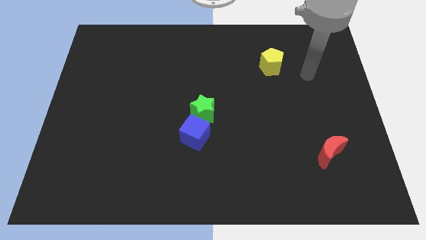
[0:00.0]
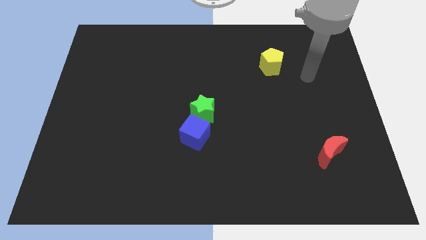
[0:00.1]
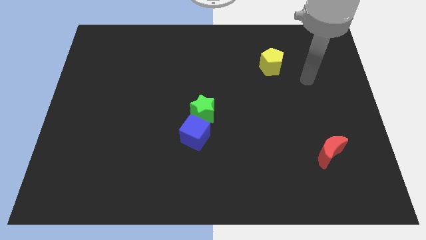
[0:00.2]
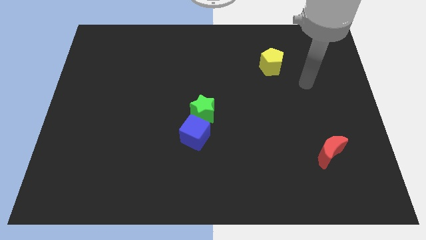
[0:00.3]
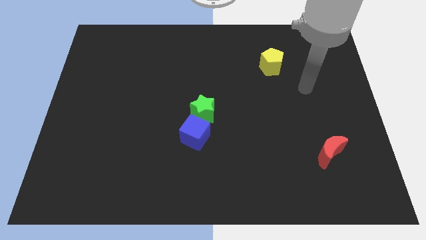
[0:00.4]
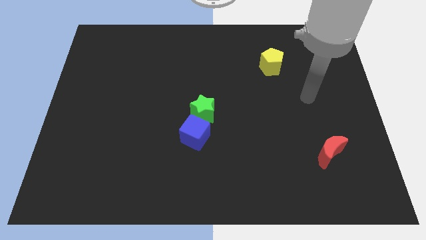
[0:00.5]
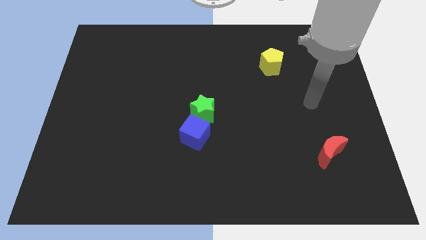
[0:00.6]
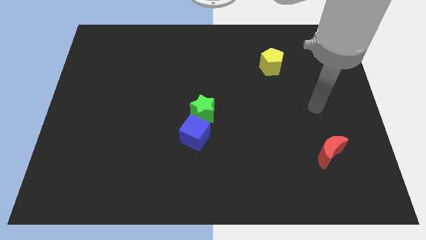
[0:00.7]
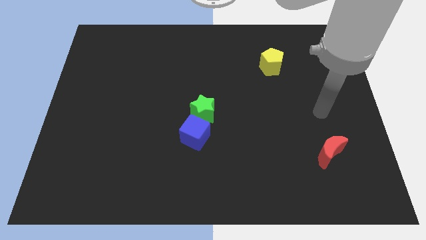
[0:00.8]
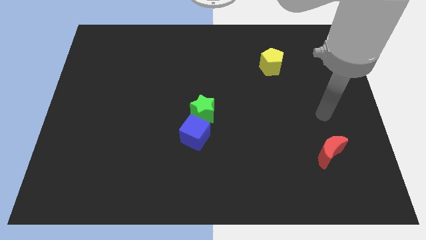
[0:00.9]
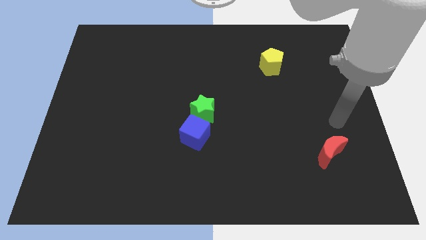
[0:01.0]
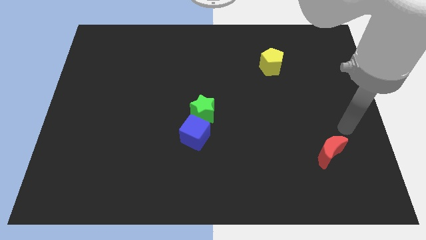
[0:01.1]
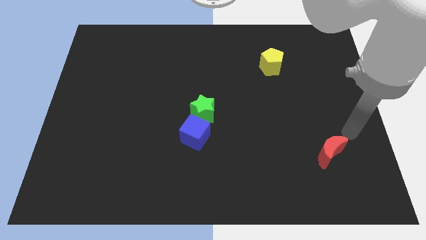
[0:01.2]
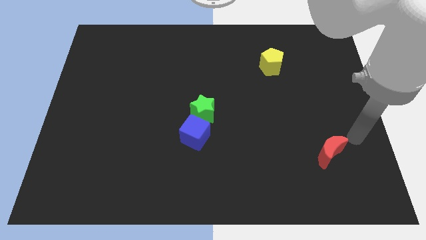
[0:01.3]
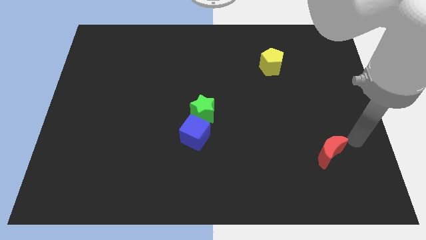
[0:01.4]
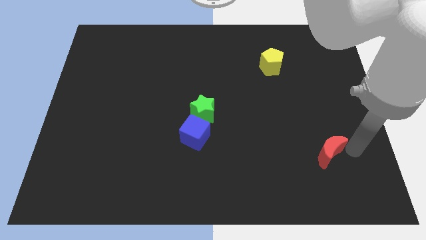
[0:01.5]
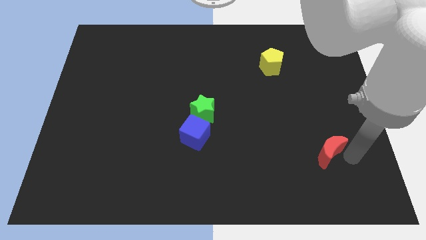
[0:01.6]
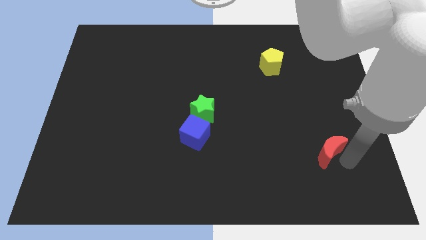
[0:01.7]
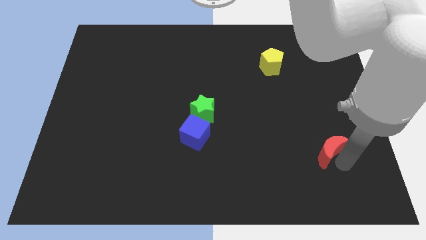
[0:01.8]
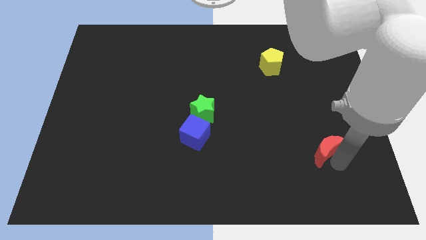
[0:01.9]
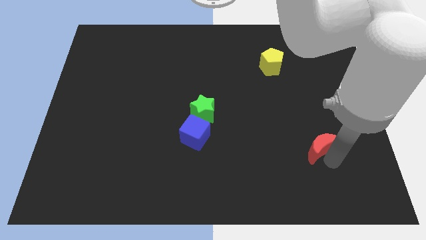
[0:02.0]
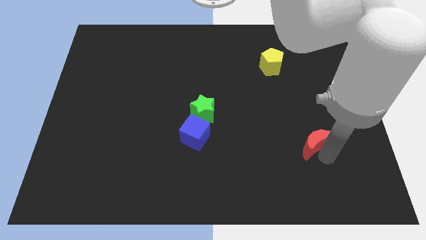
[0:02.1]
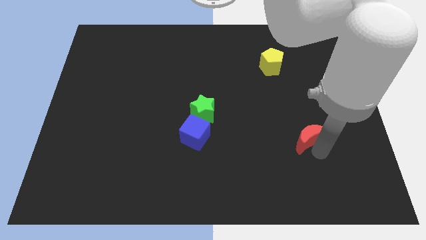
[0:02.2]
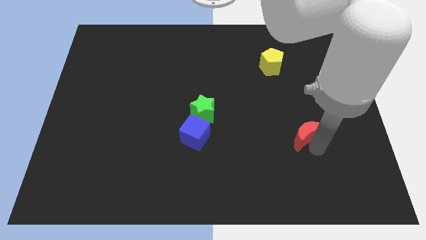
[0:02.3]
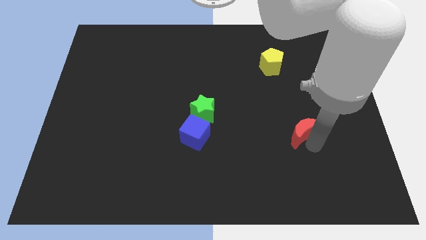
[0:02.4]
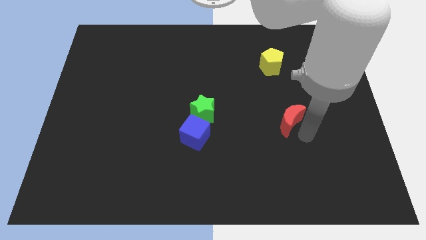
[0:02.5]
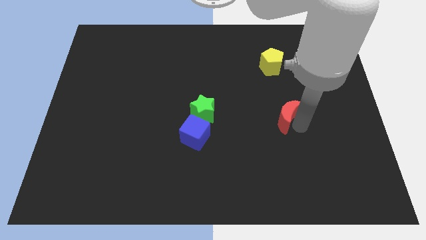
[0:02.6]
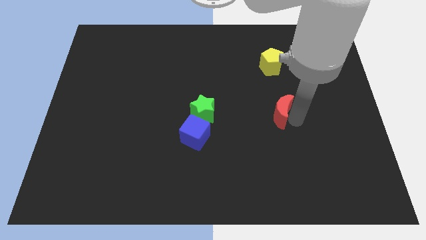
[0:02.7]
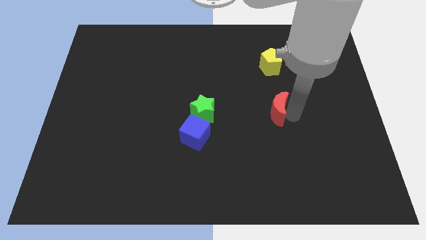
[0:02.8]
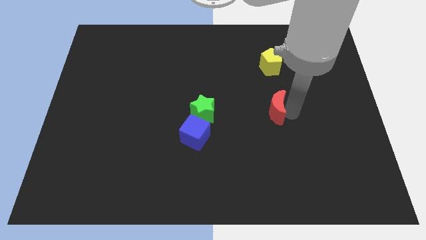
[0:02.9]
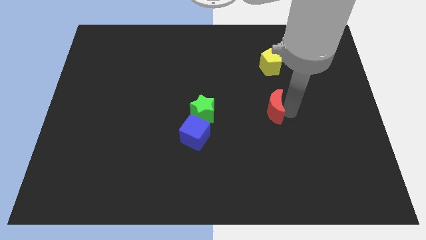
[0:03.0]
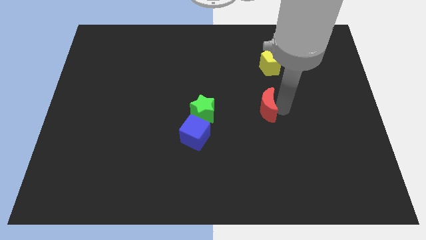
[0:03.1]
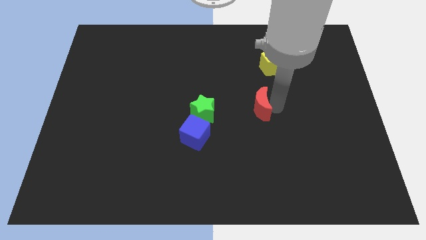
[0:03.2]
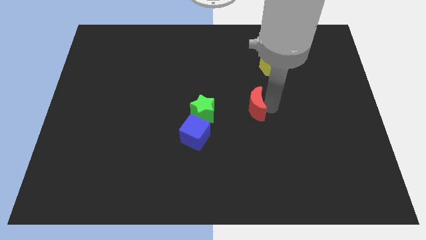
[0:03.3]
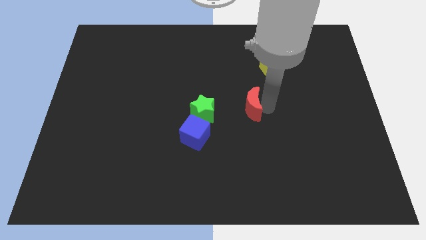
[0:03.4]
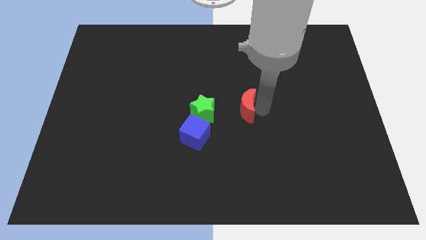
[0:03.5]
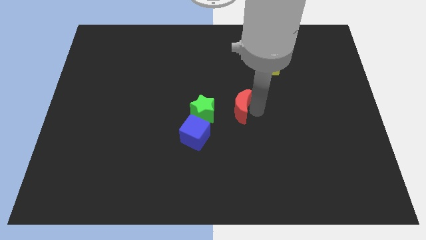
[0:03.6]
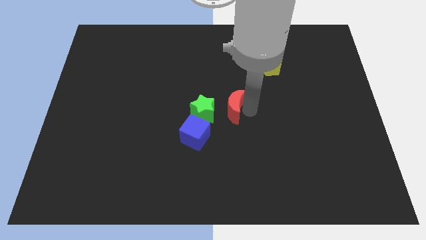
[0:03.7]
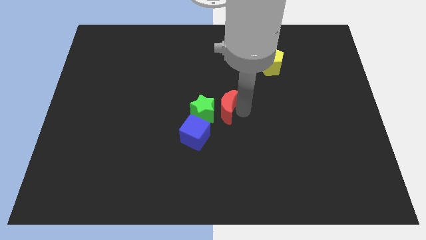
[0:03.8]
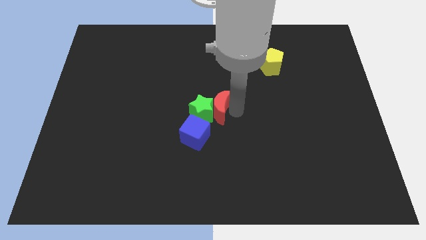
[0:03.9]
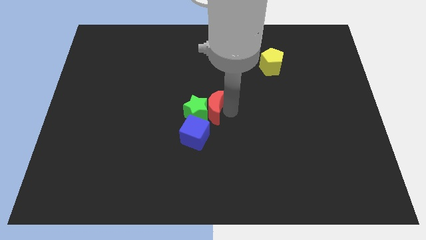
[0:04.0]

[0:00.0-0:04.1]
move the red block towards the star

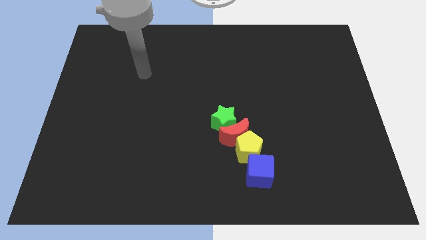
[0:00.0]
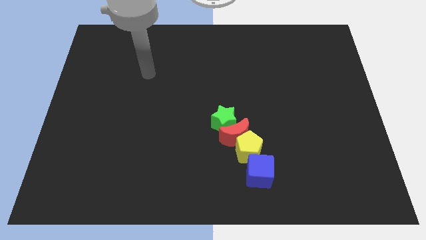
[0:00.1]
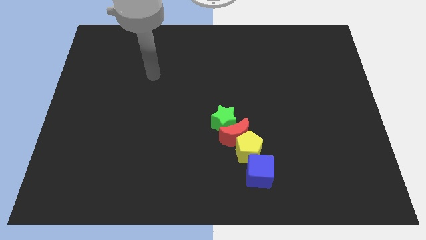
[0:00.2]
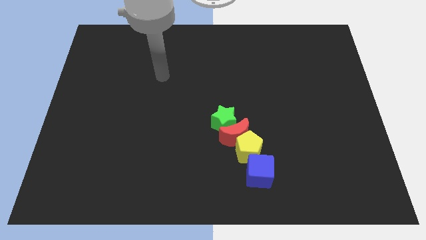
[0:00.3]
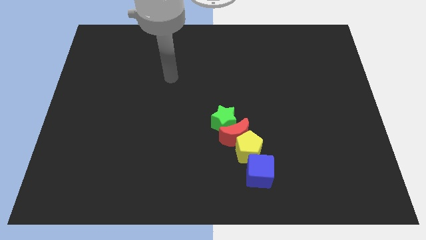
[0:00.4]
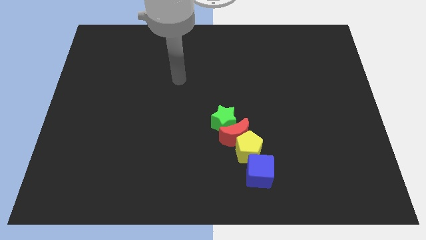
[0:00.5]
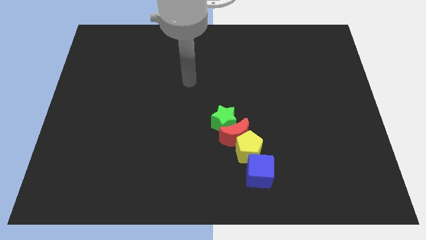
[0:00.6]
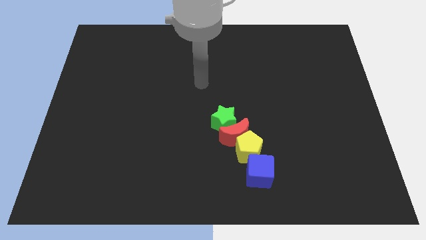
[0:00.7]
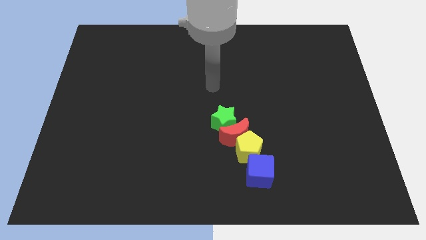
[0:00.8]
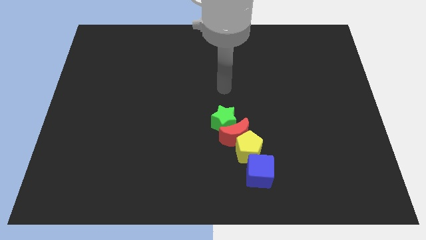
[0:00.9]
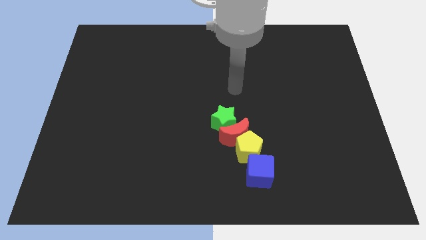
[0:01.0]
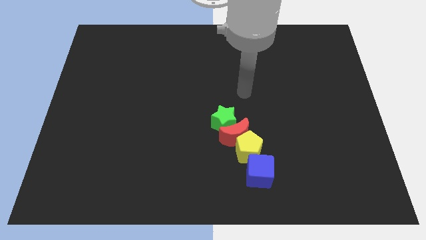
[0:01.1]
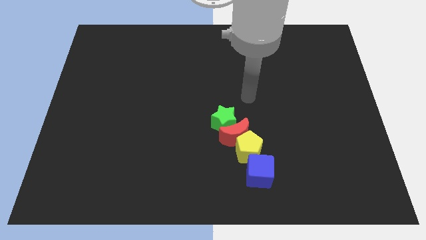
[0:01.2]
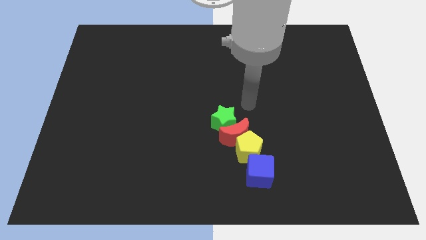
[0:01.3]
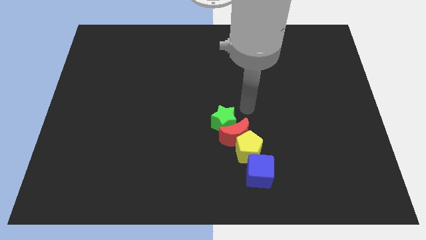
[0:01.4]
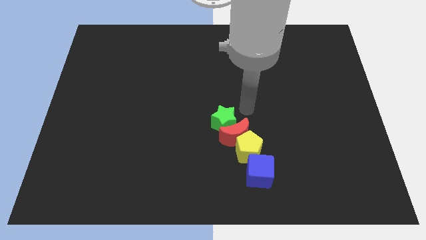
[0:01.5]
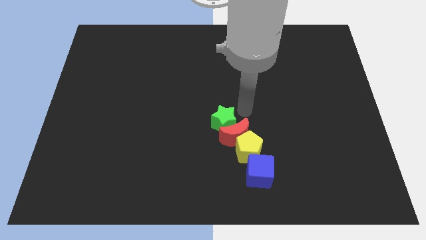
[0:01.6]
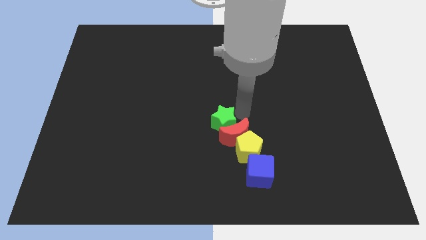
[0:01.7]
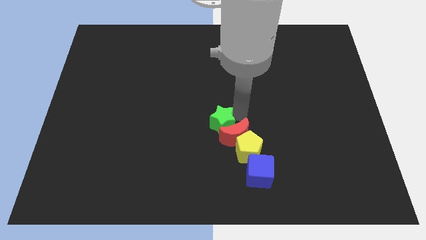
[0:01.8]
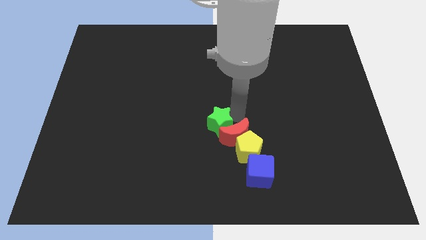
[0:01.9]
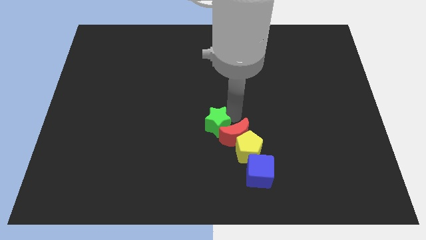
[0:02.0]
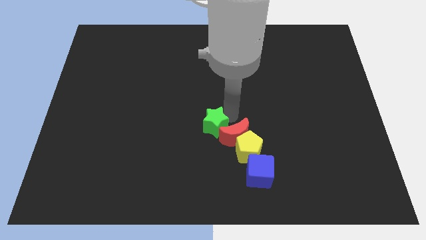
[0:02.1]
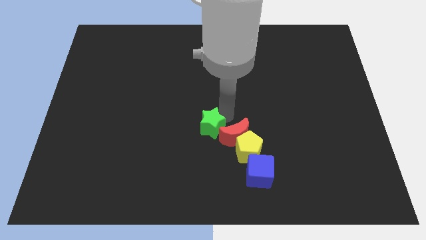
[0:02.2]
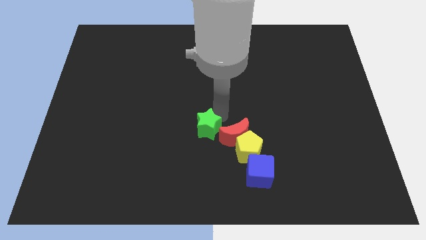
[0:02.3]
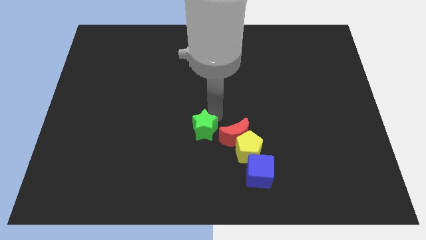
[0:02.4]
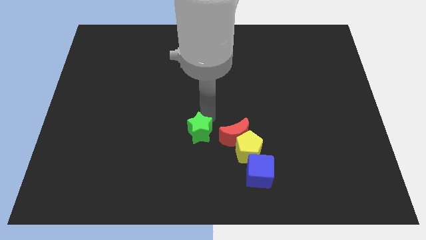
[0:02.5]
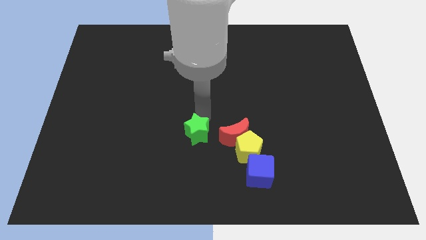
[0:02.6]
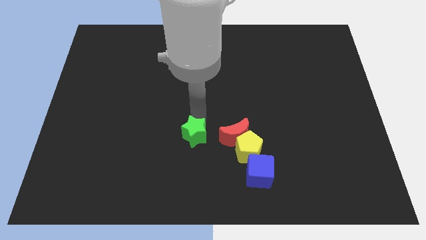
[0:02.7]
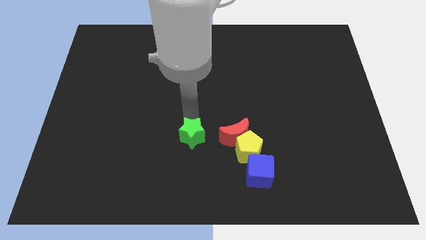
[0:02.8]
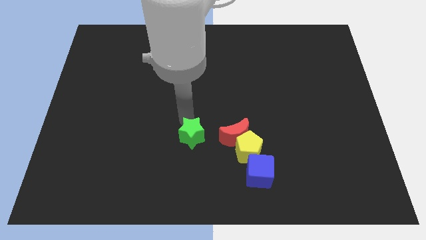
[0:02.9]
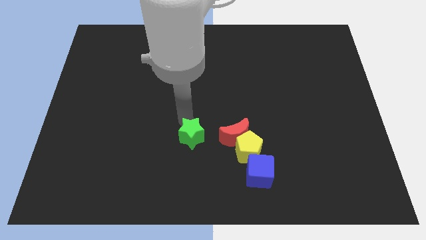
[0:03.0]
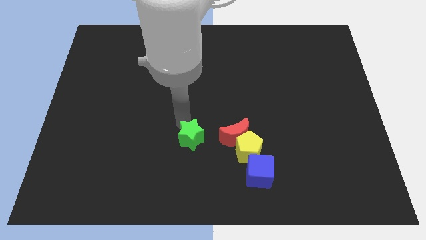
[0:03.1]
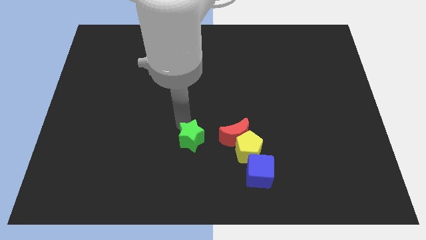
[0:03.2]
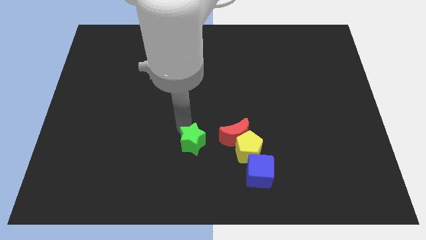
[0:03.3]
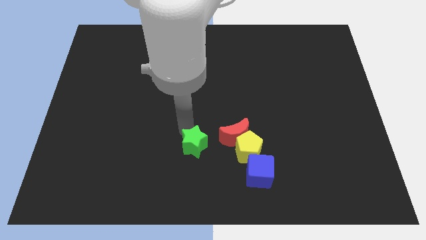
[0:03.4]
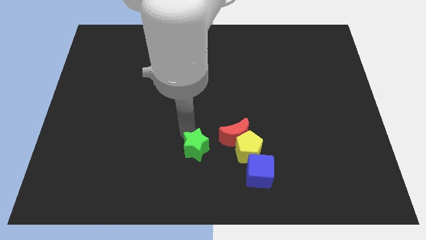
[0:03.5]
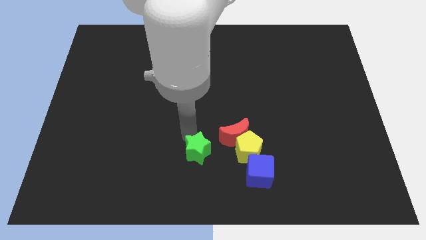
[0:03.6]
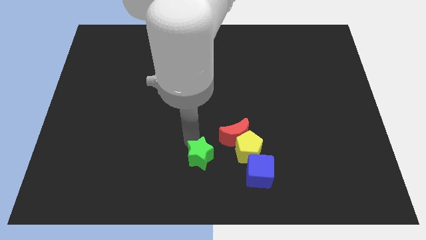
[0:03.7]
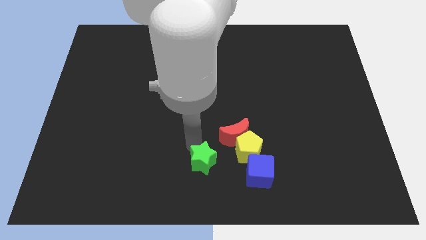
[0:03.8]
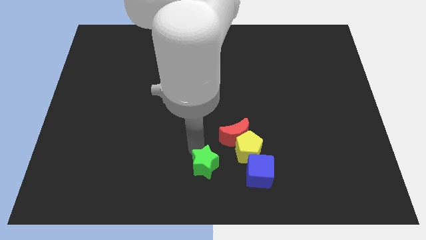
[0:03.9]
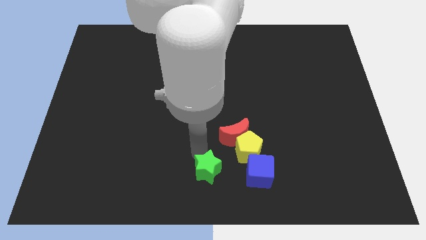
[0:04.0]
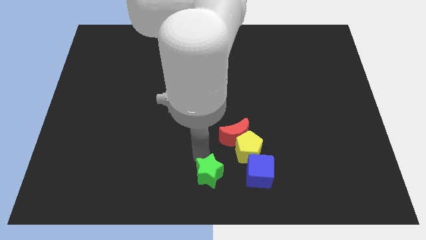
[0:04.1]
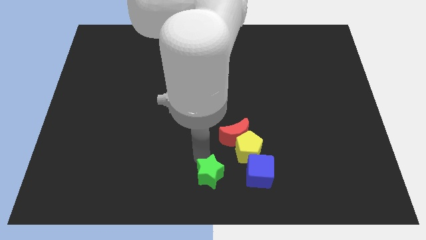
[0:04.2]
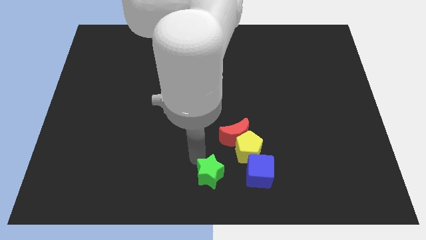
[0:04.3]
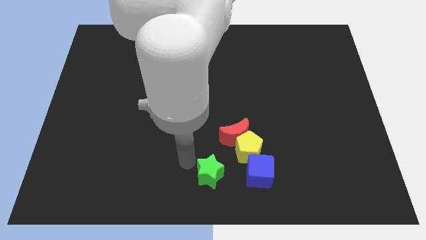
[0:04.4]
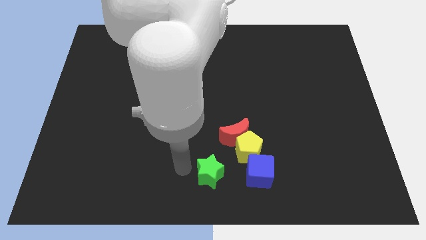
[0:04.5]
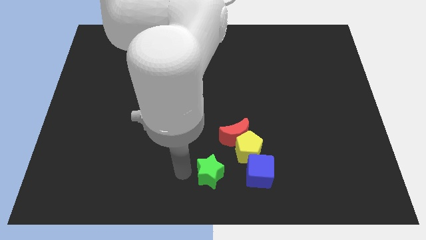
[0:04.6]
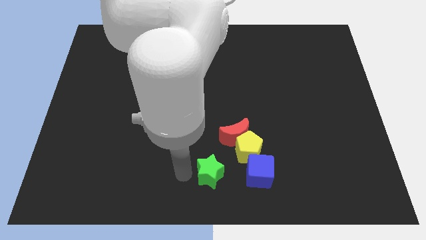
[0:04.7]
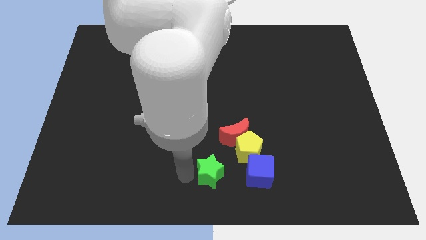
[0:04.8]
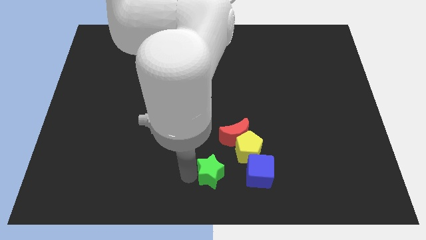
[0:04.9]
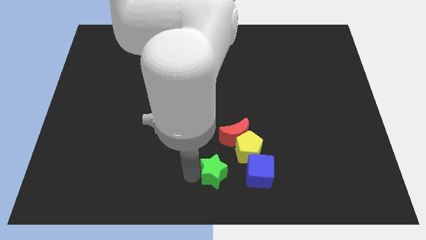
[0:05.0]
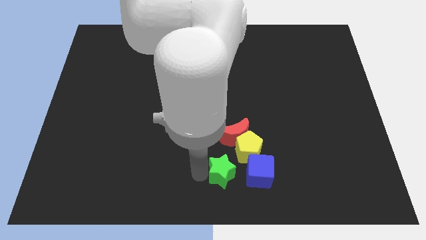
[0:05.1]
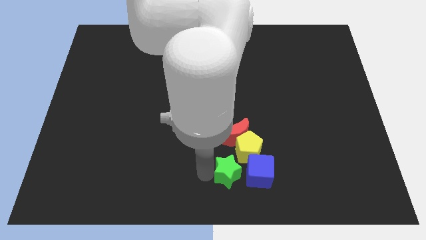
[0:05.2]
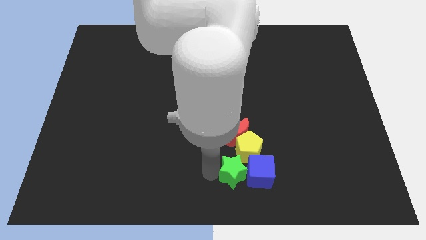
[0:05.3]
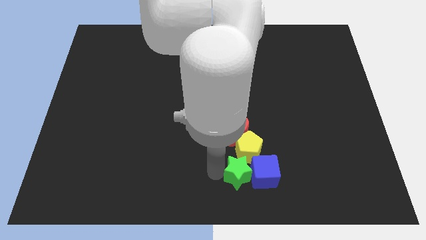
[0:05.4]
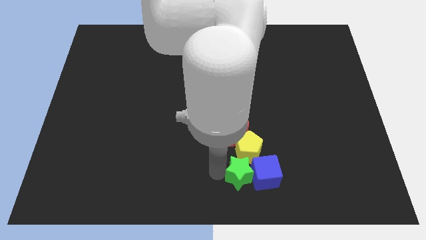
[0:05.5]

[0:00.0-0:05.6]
push the star close to the cube
